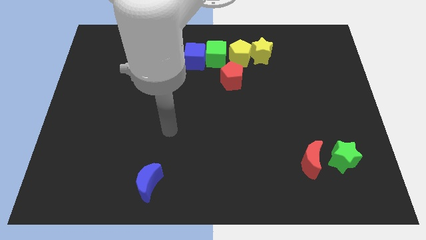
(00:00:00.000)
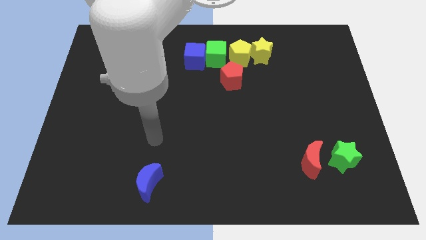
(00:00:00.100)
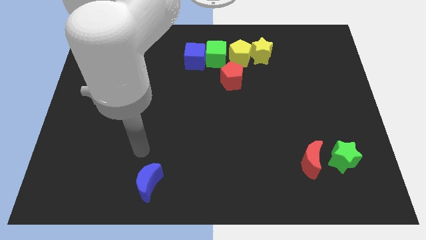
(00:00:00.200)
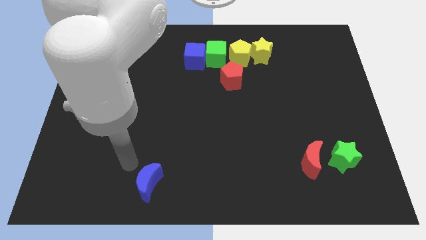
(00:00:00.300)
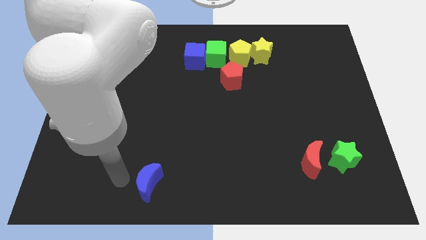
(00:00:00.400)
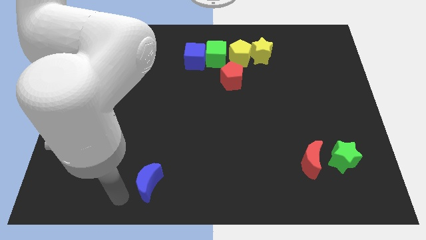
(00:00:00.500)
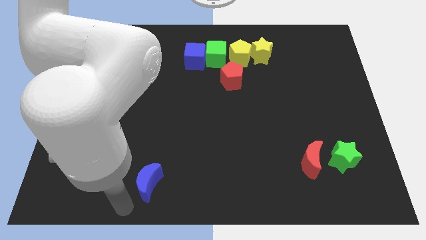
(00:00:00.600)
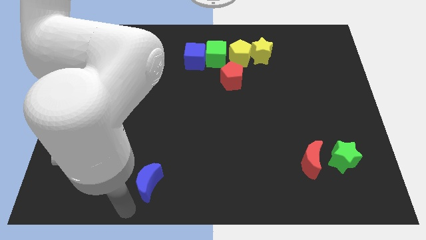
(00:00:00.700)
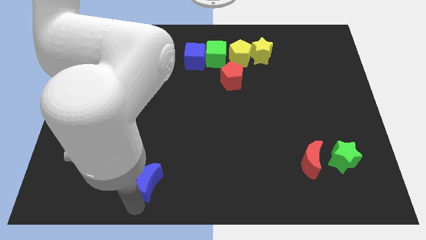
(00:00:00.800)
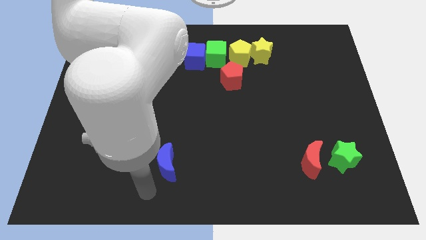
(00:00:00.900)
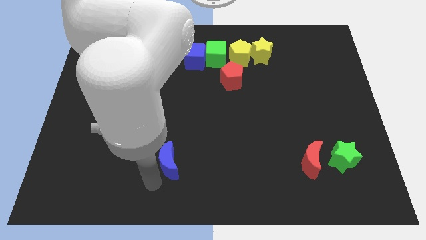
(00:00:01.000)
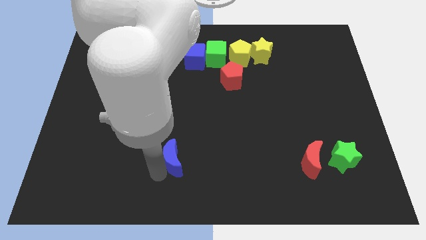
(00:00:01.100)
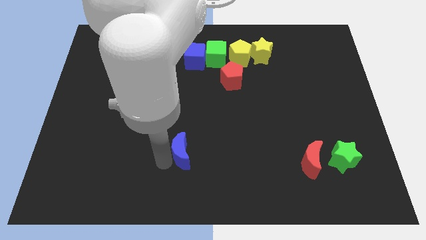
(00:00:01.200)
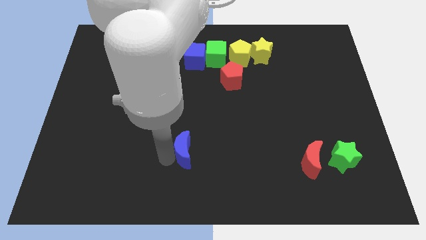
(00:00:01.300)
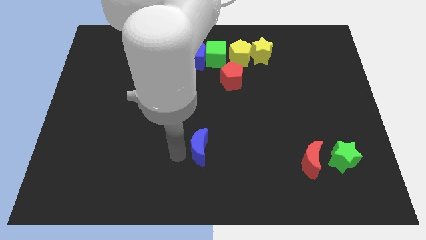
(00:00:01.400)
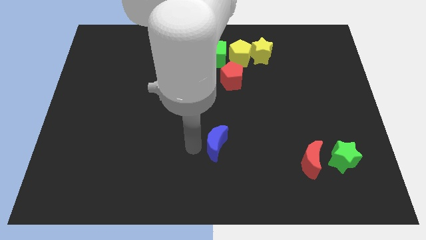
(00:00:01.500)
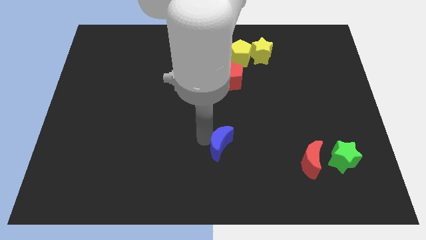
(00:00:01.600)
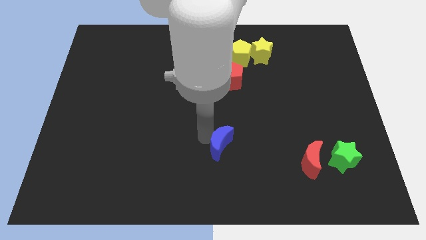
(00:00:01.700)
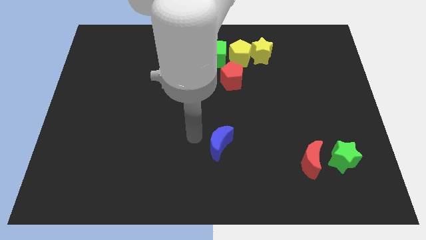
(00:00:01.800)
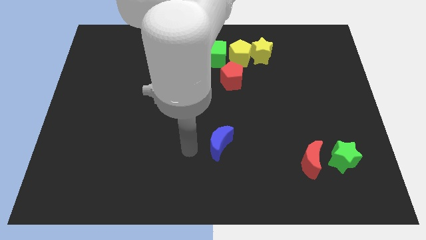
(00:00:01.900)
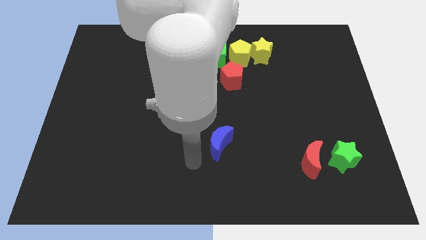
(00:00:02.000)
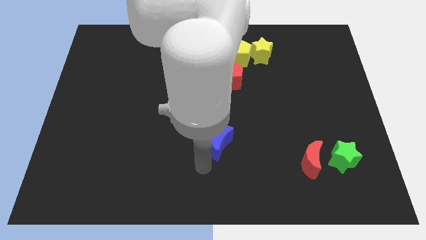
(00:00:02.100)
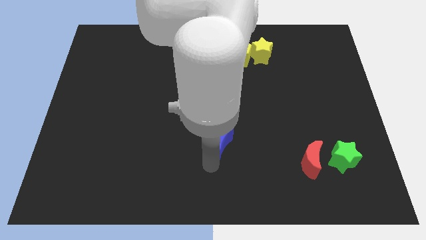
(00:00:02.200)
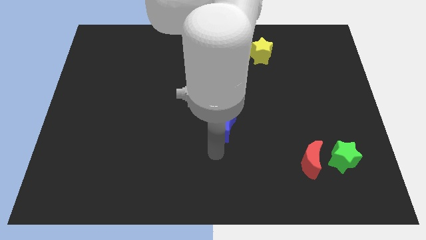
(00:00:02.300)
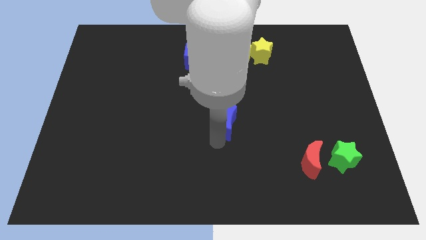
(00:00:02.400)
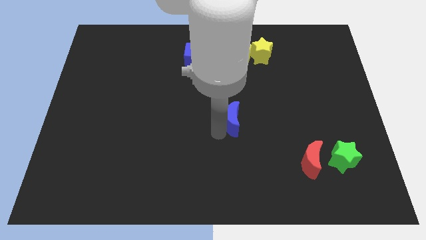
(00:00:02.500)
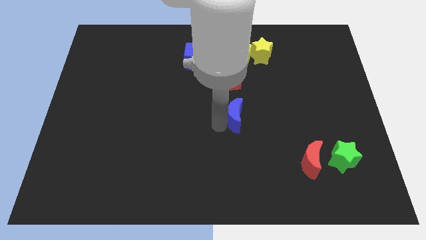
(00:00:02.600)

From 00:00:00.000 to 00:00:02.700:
move blue moon towards the center

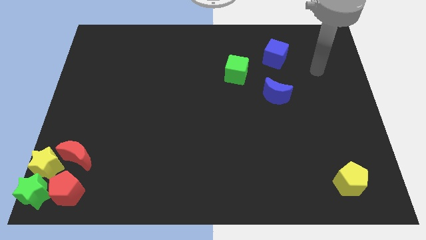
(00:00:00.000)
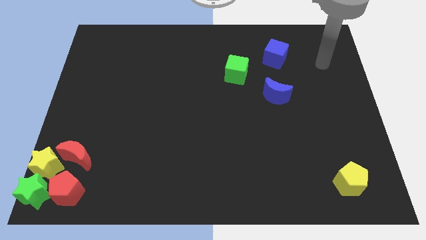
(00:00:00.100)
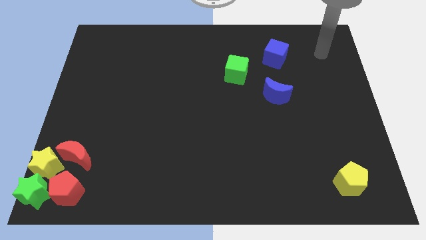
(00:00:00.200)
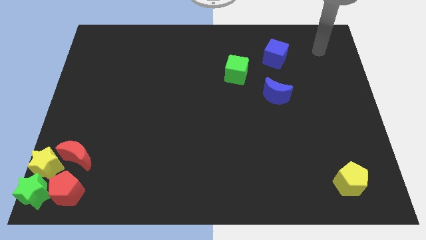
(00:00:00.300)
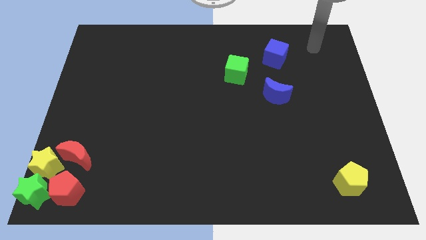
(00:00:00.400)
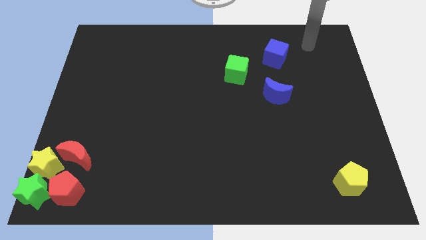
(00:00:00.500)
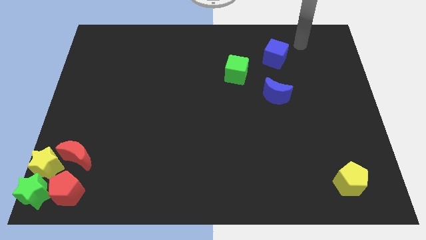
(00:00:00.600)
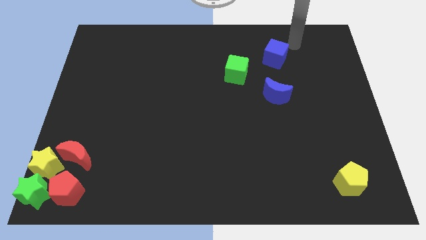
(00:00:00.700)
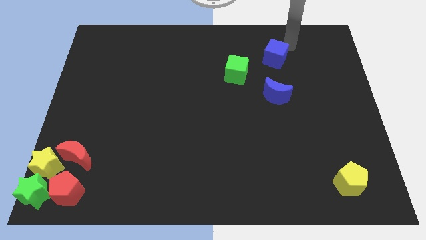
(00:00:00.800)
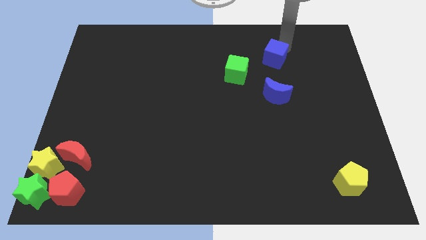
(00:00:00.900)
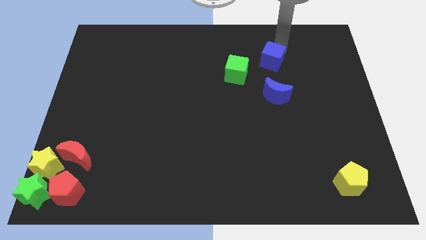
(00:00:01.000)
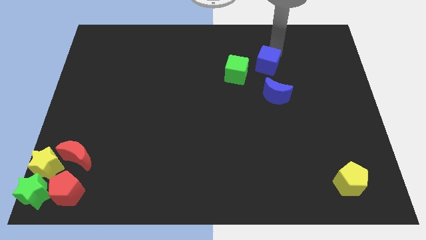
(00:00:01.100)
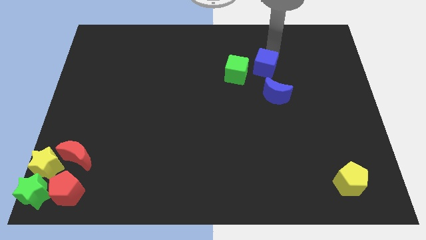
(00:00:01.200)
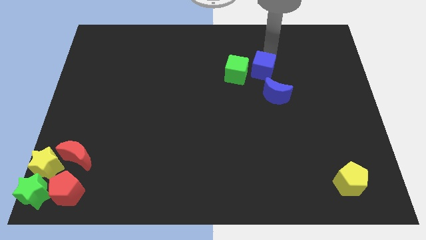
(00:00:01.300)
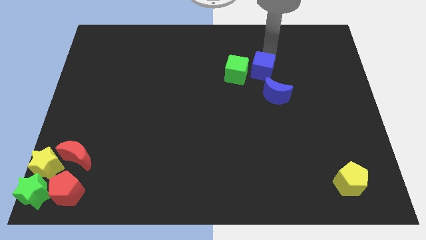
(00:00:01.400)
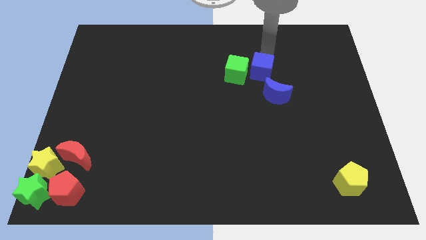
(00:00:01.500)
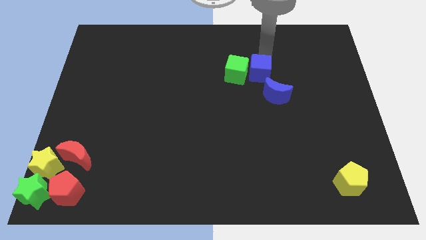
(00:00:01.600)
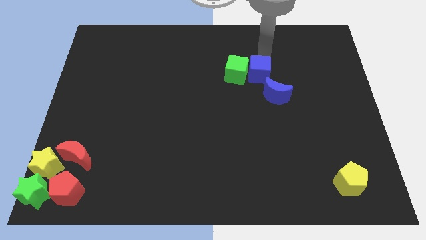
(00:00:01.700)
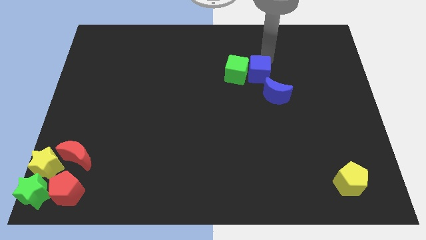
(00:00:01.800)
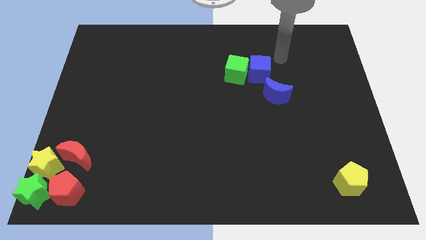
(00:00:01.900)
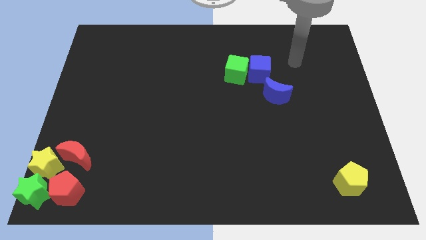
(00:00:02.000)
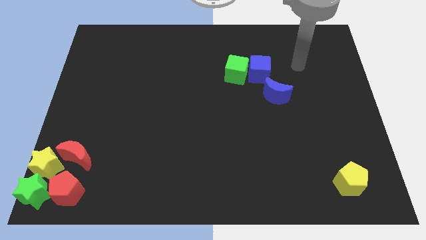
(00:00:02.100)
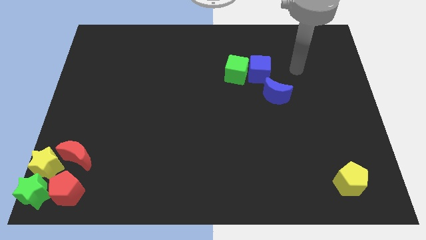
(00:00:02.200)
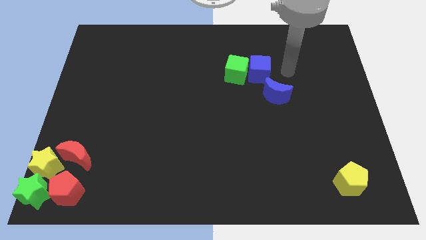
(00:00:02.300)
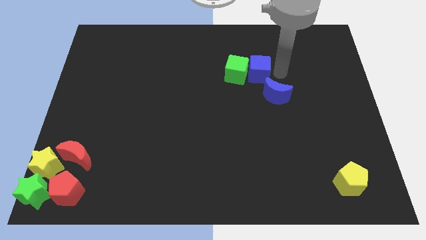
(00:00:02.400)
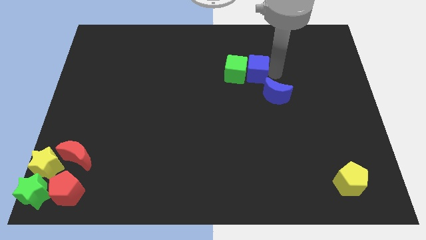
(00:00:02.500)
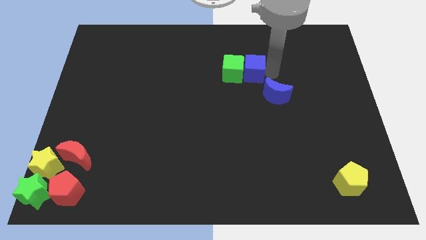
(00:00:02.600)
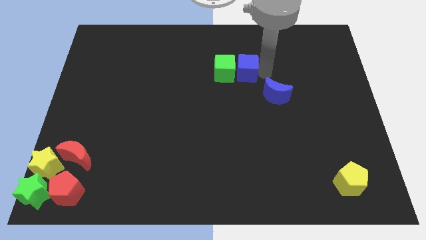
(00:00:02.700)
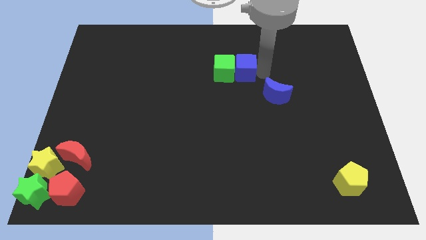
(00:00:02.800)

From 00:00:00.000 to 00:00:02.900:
push the blue cube into the green cube

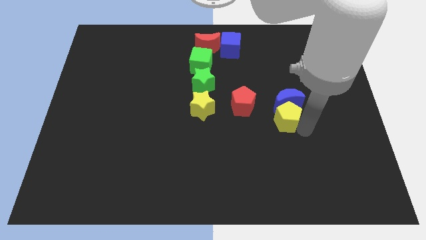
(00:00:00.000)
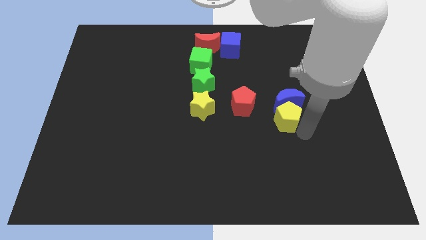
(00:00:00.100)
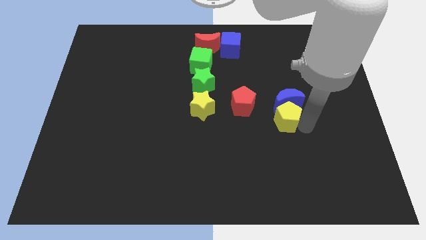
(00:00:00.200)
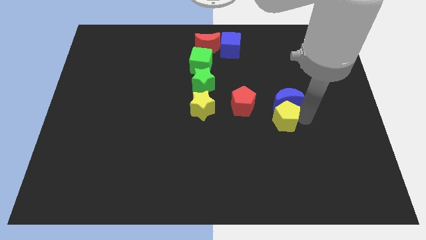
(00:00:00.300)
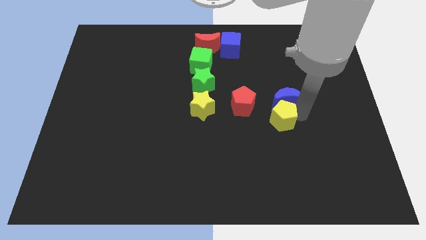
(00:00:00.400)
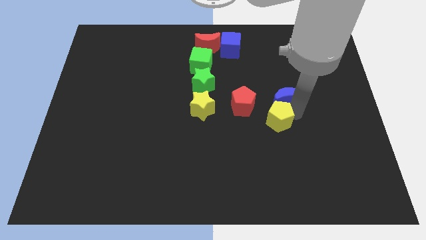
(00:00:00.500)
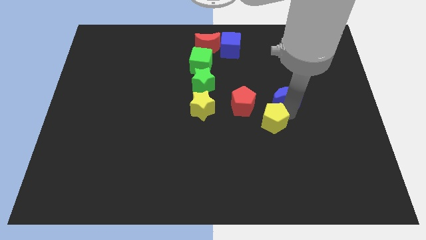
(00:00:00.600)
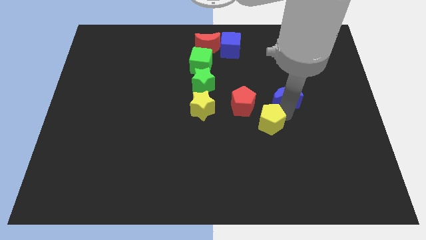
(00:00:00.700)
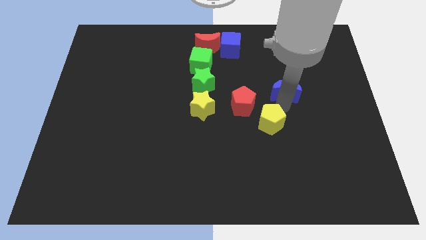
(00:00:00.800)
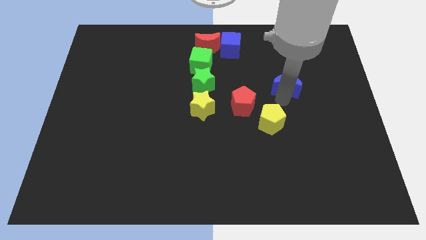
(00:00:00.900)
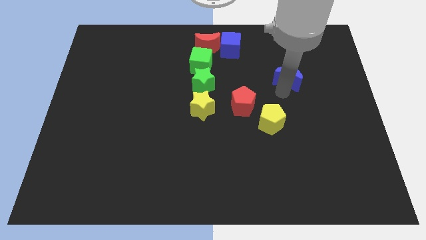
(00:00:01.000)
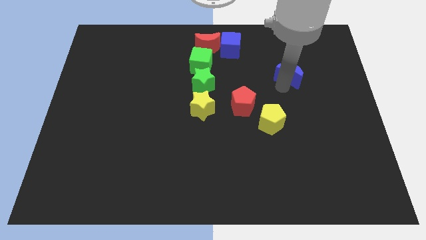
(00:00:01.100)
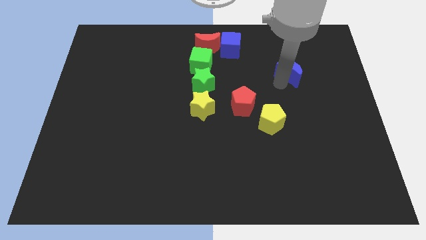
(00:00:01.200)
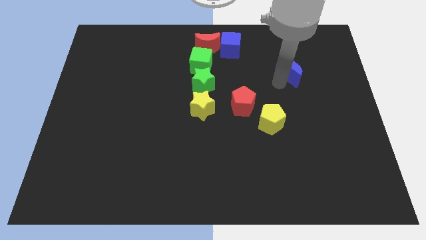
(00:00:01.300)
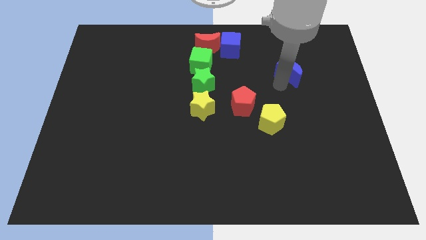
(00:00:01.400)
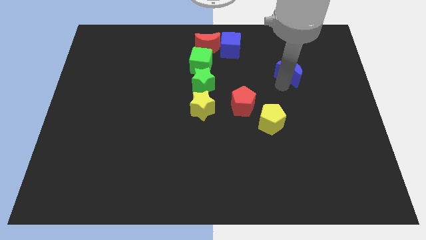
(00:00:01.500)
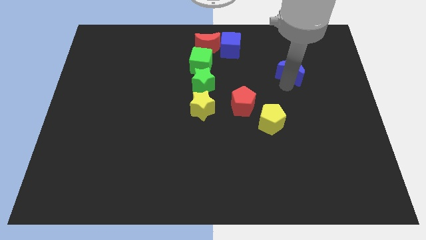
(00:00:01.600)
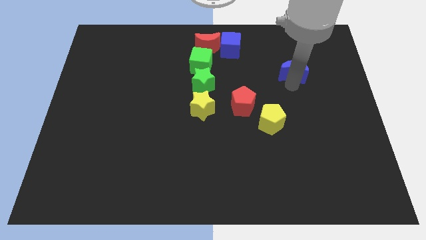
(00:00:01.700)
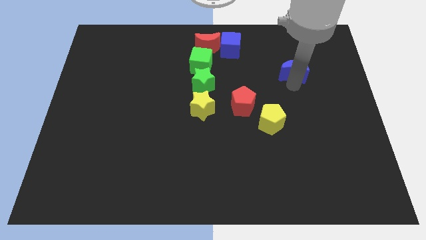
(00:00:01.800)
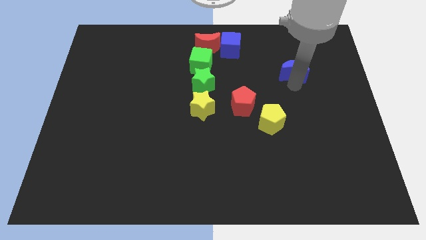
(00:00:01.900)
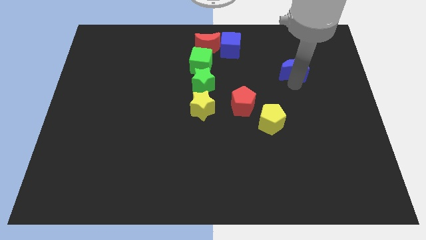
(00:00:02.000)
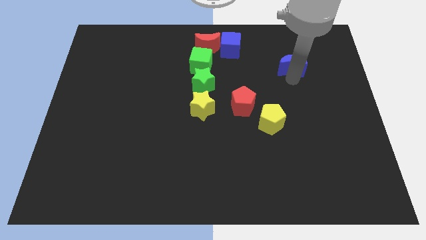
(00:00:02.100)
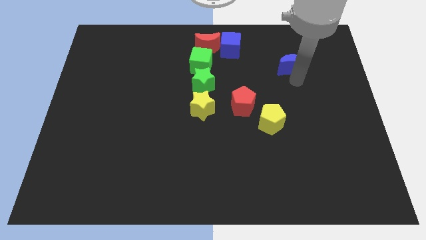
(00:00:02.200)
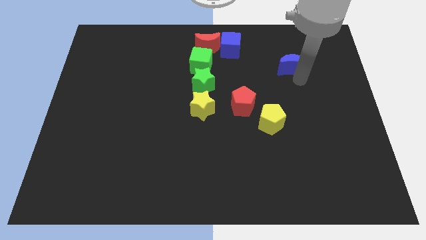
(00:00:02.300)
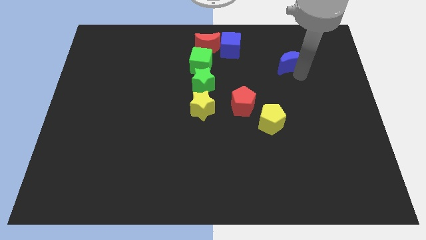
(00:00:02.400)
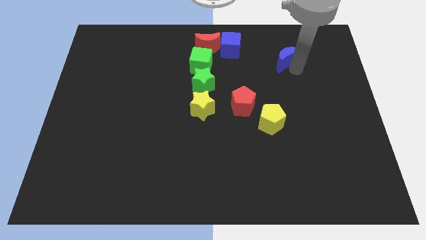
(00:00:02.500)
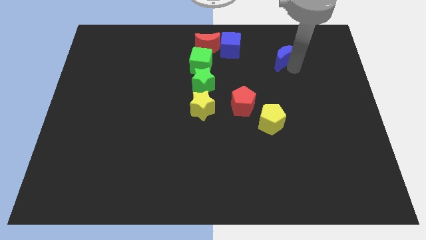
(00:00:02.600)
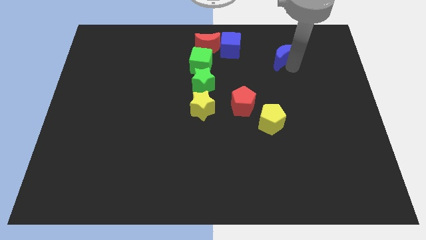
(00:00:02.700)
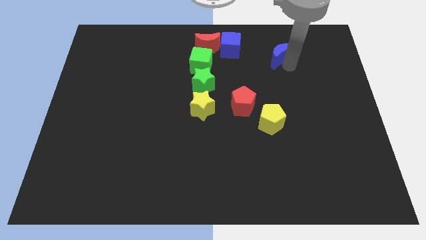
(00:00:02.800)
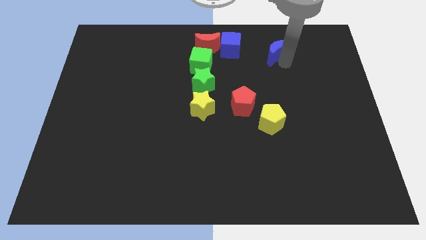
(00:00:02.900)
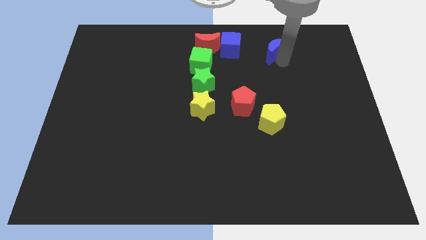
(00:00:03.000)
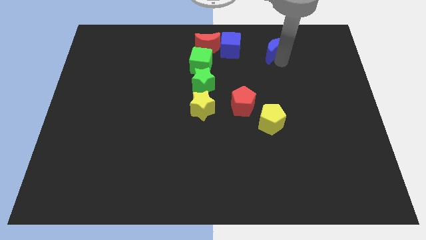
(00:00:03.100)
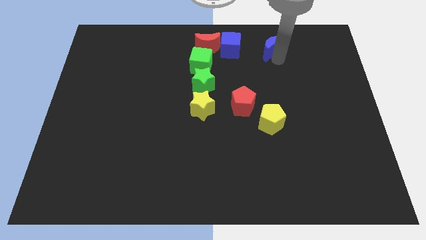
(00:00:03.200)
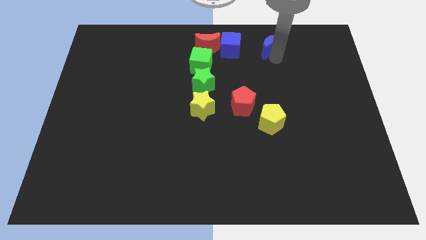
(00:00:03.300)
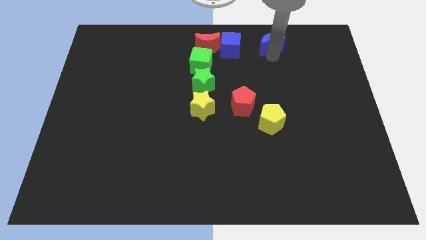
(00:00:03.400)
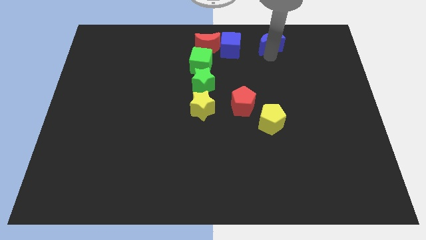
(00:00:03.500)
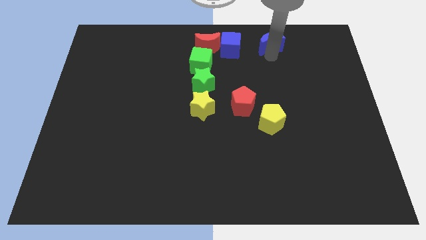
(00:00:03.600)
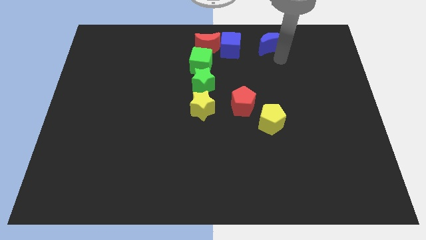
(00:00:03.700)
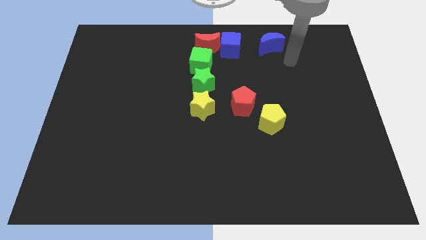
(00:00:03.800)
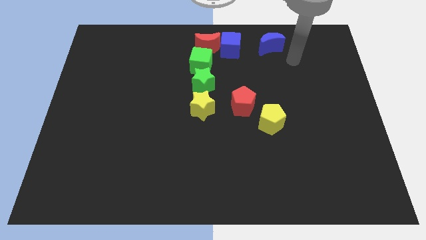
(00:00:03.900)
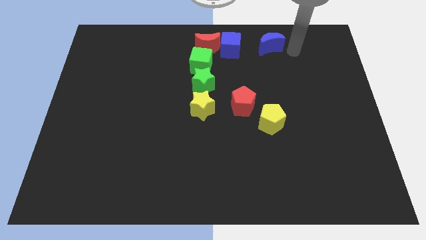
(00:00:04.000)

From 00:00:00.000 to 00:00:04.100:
separate blue moon from yellow pentagon
